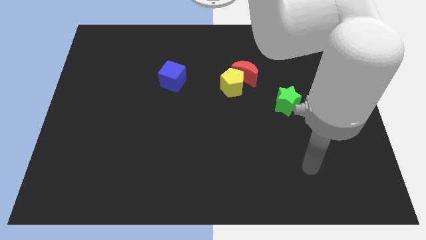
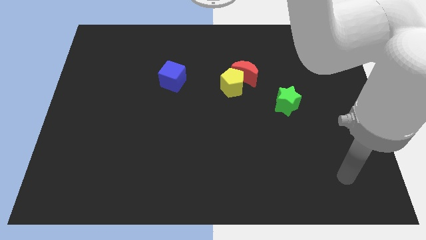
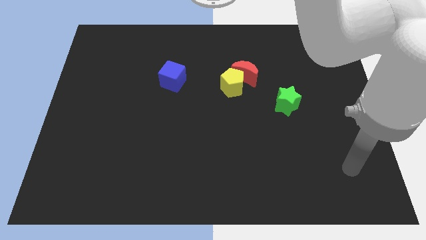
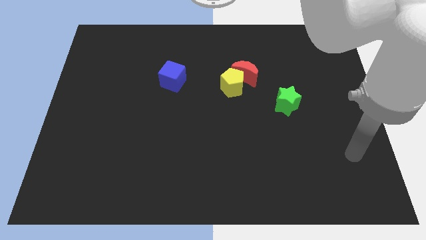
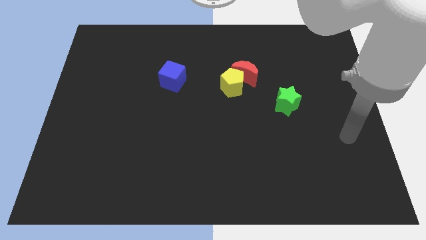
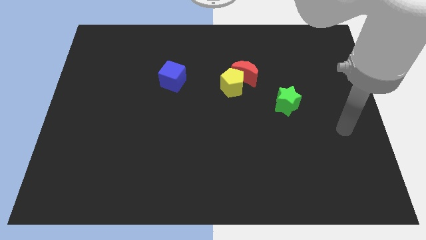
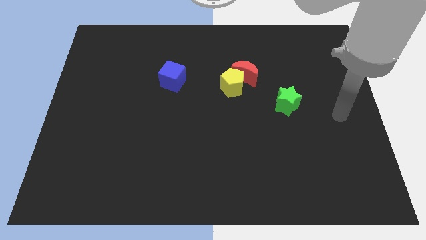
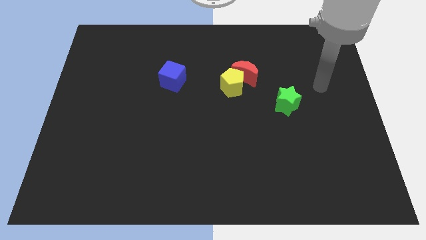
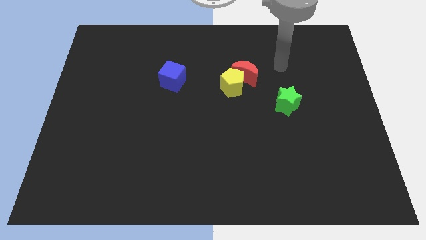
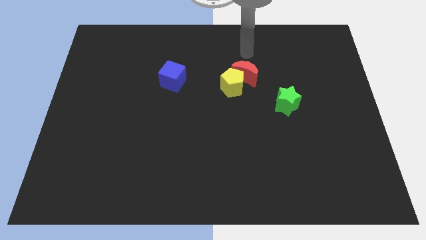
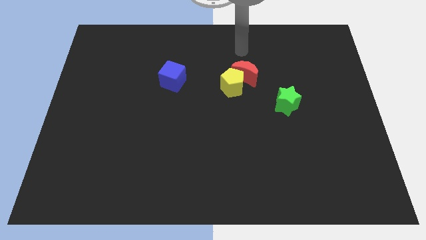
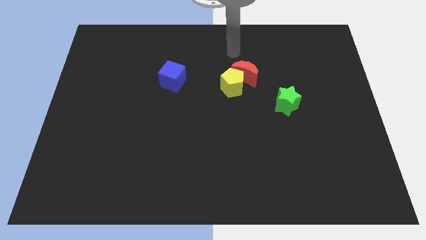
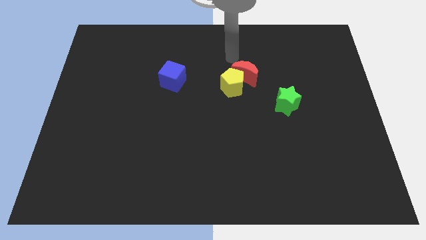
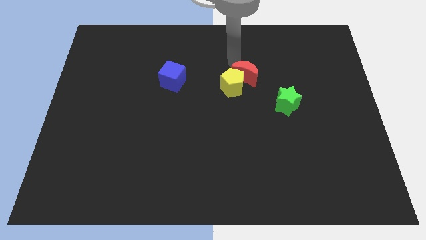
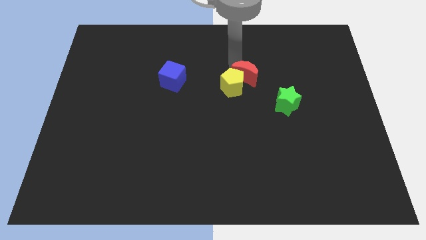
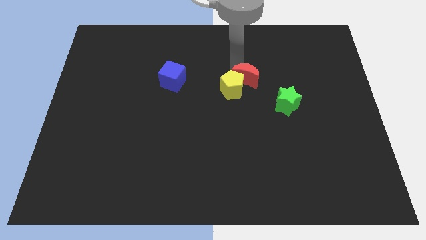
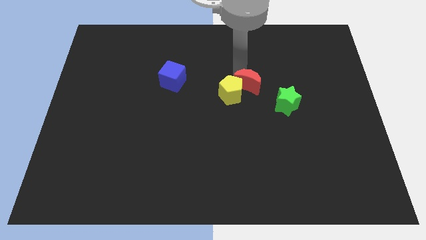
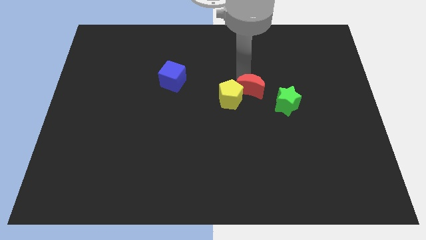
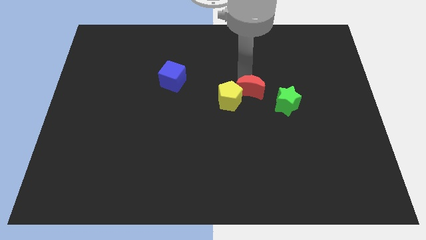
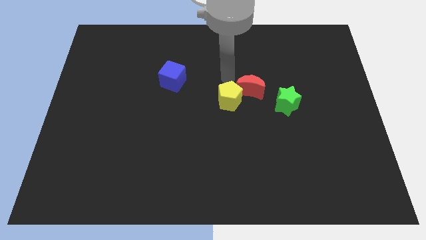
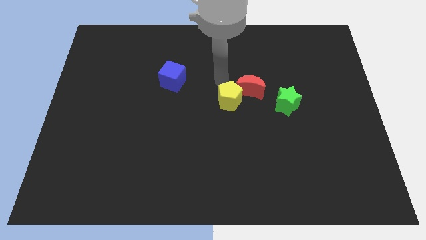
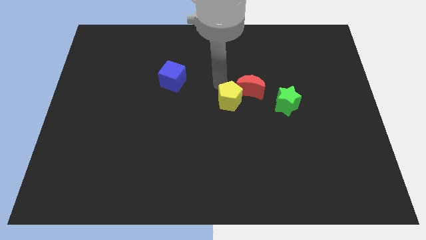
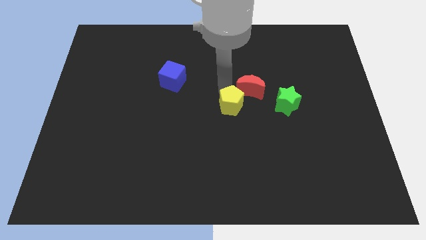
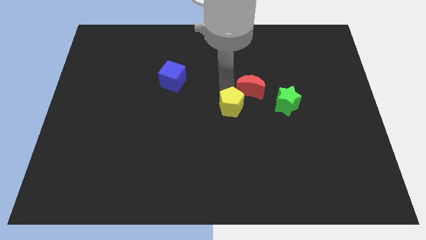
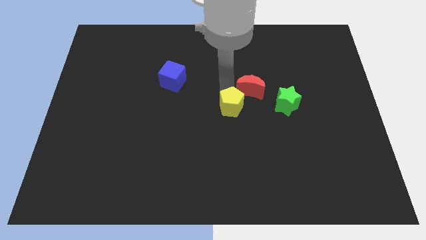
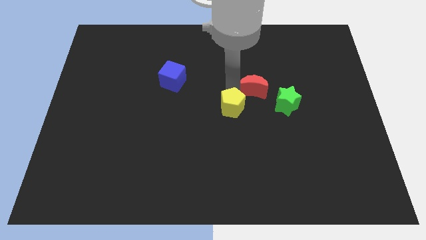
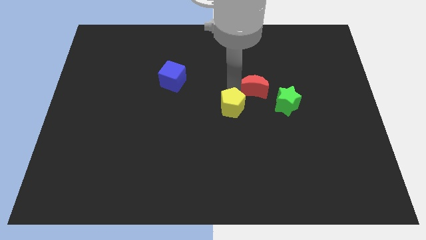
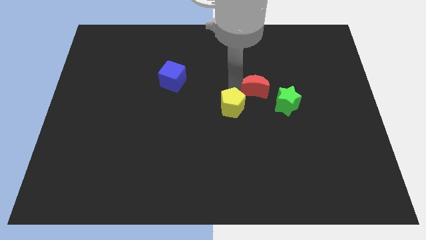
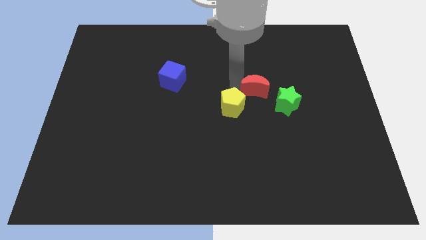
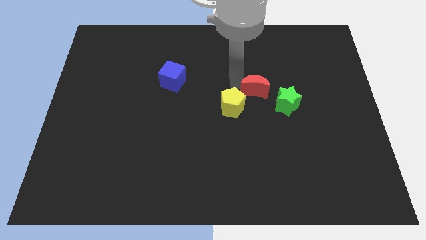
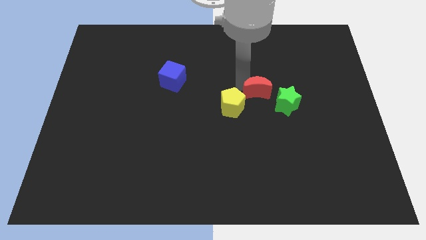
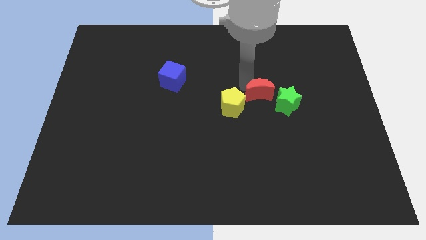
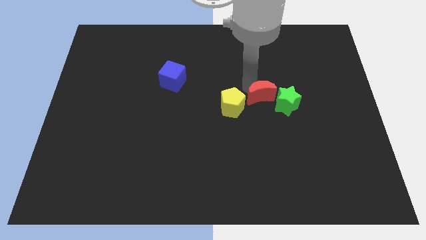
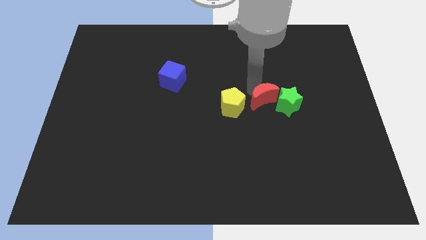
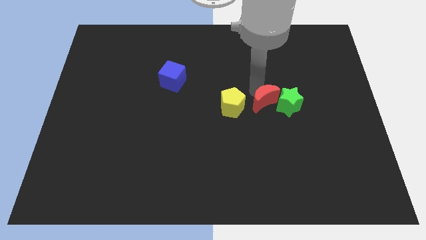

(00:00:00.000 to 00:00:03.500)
push the red moon close to the star

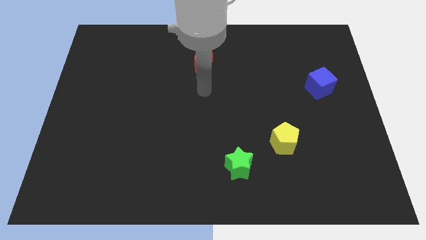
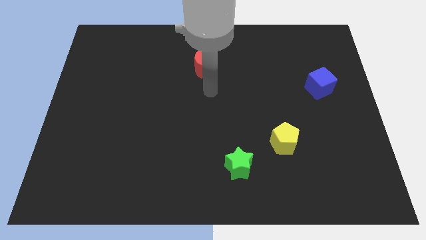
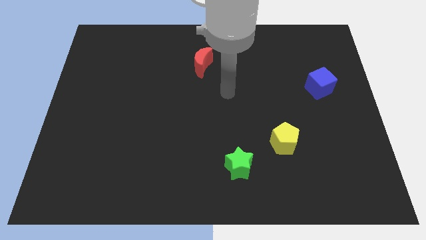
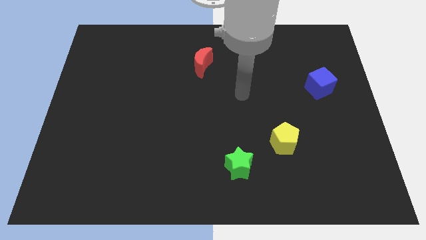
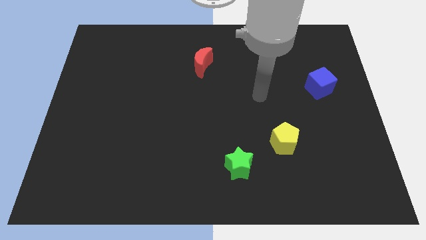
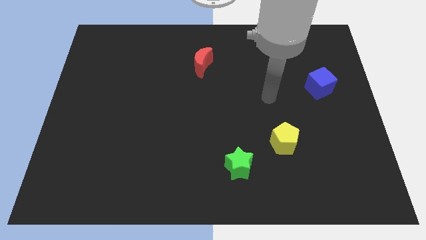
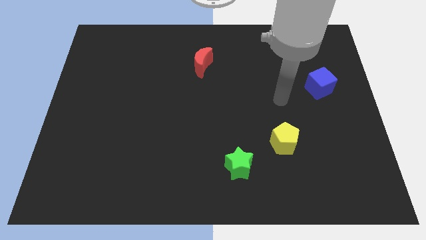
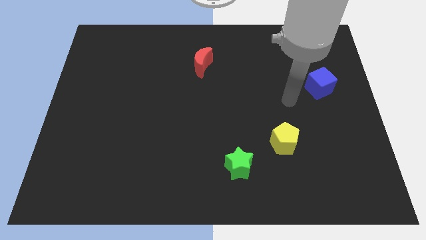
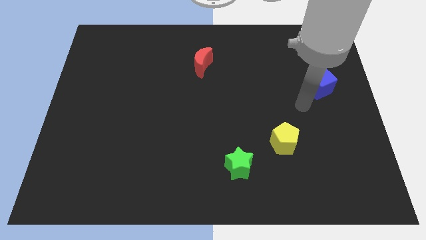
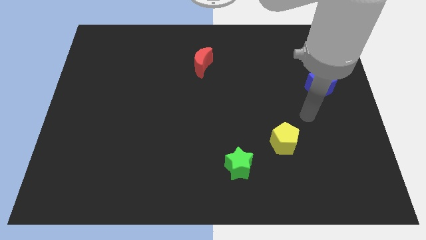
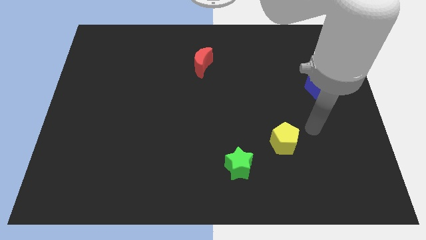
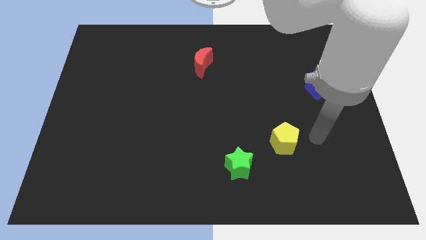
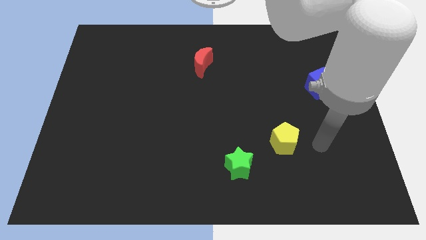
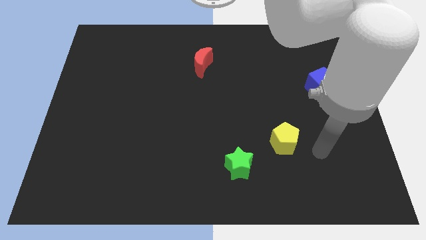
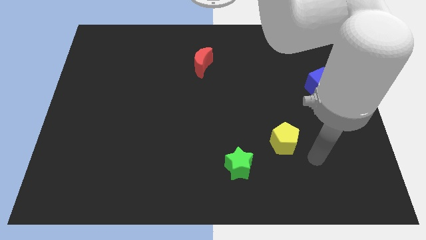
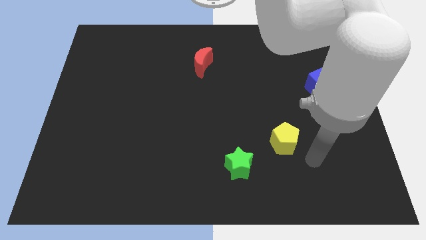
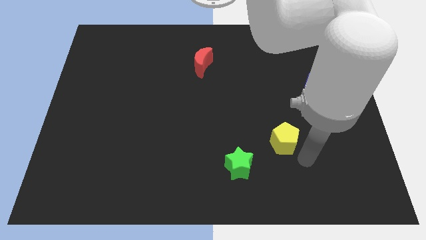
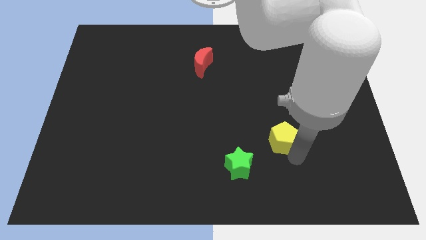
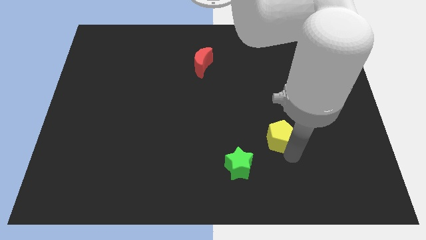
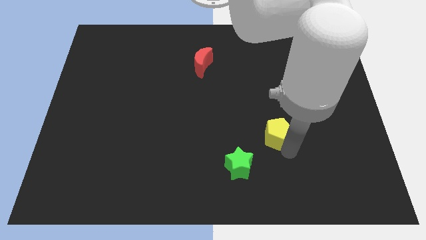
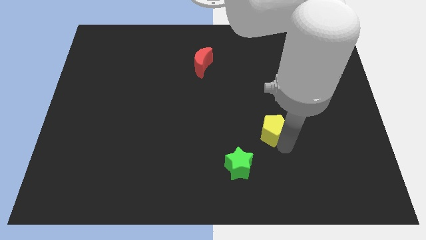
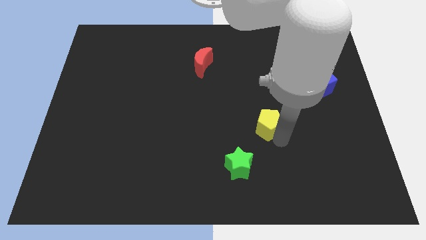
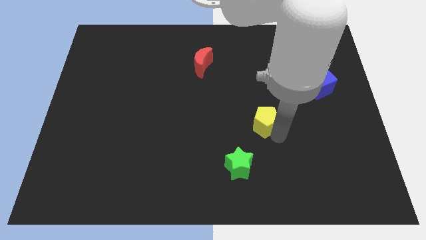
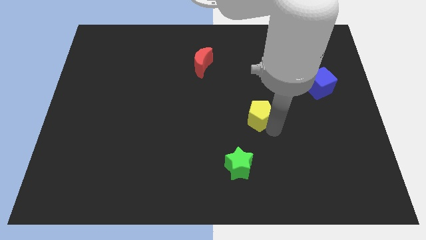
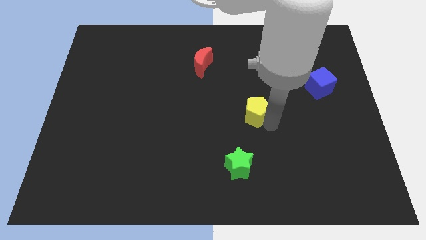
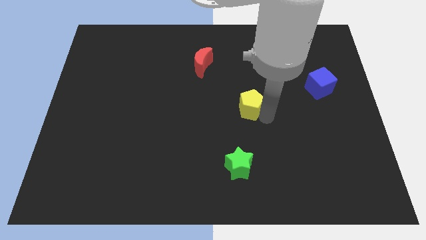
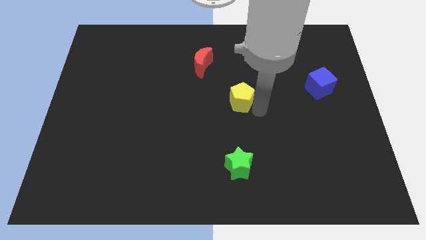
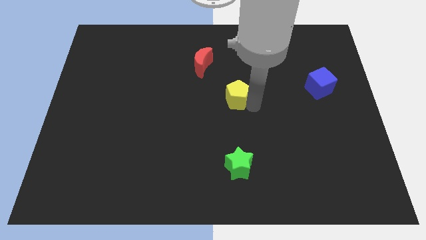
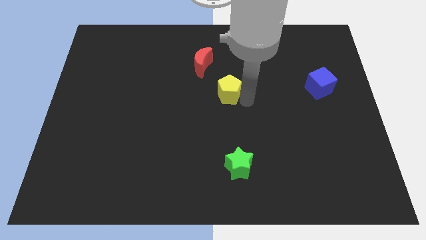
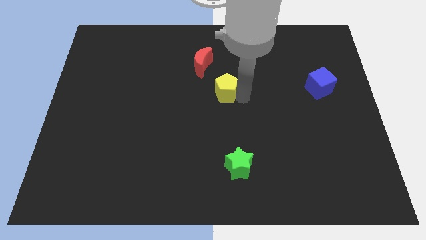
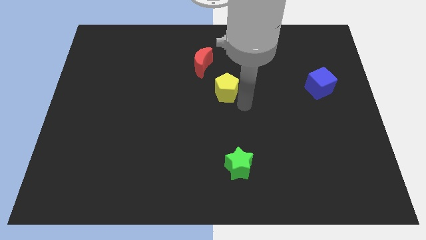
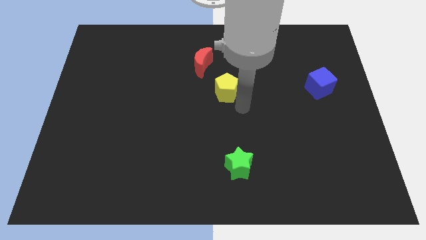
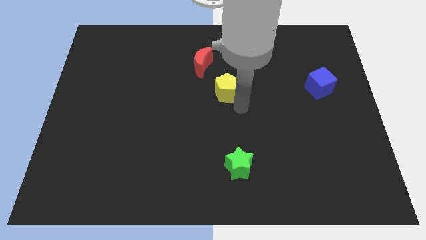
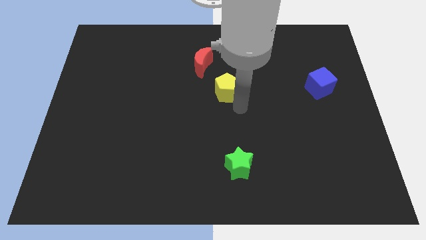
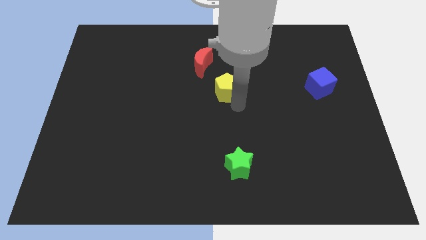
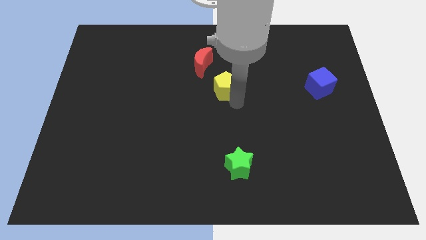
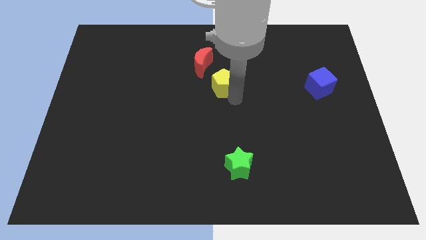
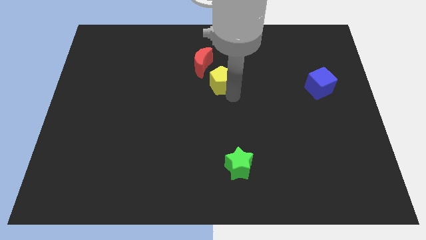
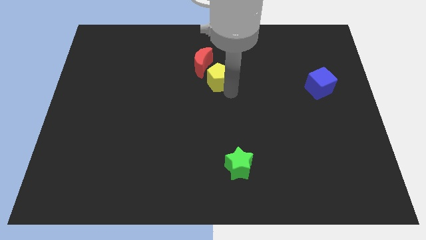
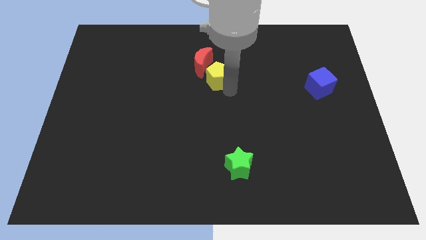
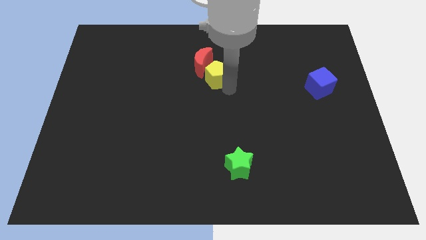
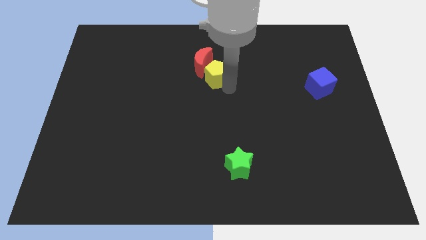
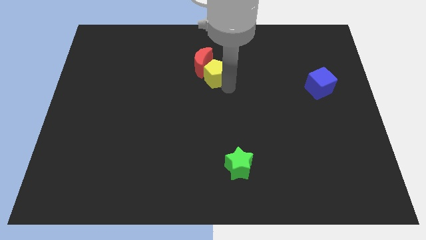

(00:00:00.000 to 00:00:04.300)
move the yellow pentagon to the moon

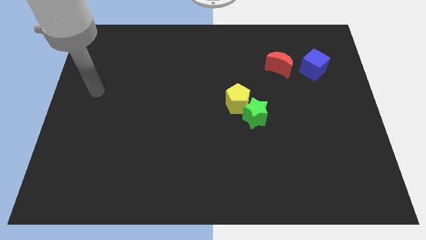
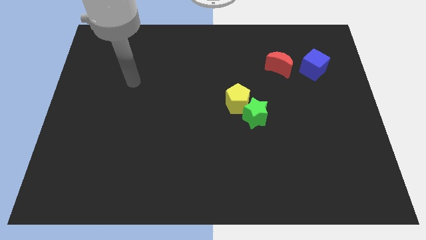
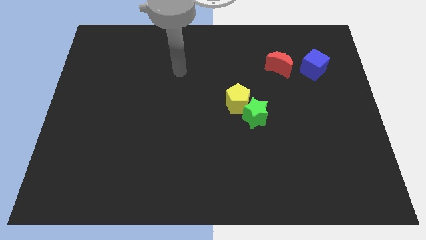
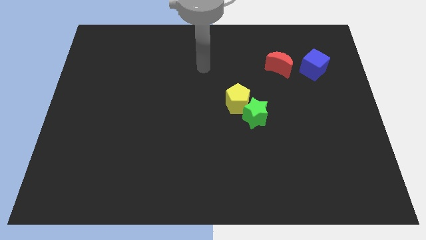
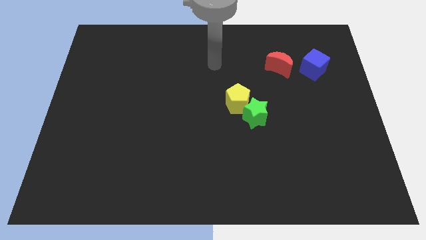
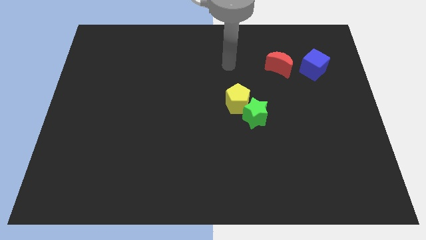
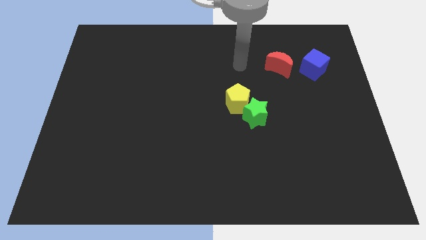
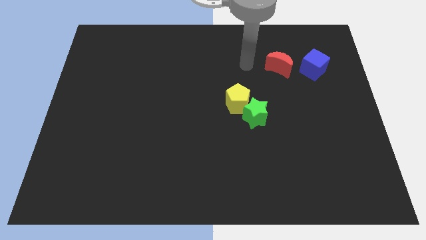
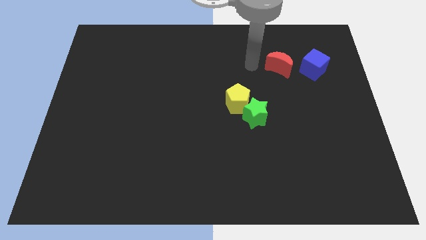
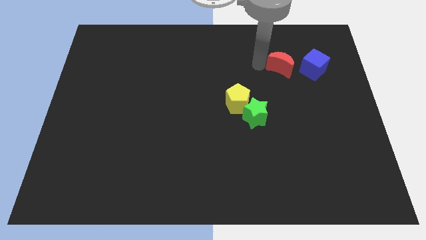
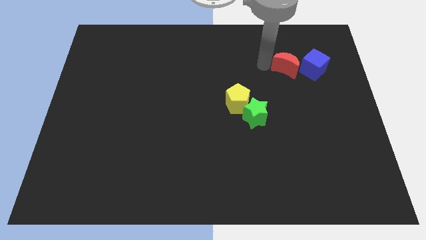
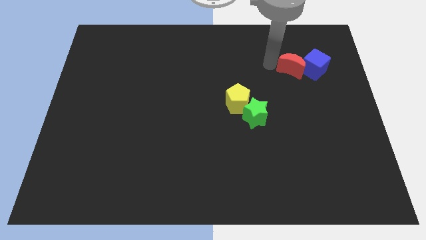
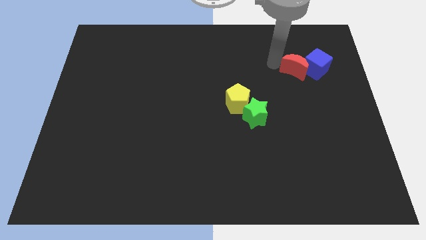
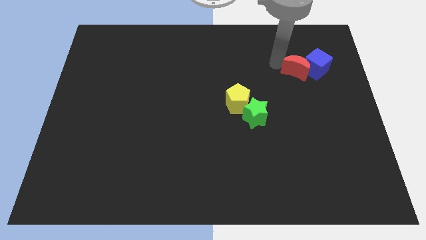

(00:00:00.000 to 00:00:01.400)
move the moon next to the blue cube
